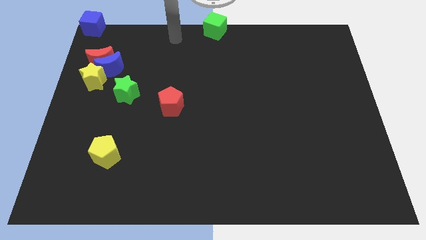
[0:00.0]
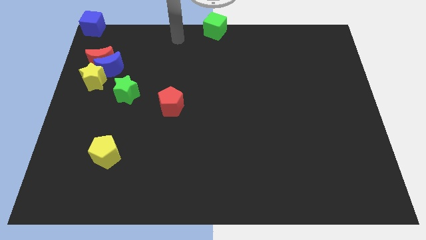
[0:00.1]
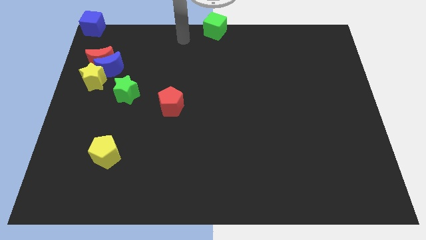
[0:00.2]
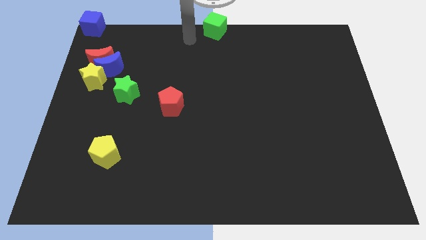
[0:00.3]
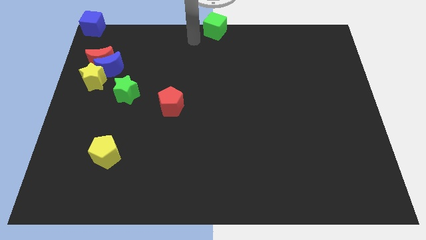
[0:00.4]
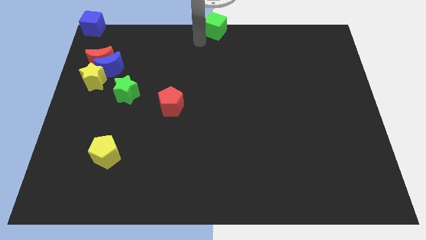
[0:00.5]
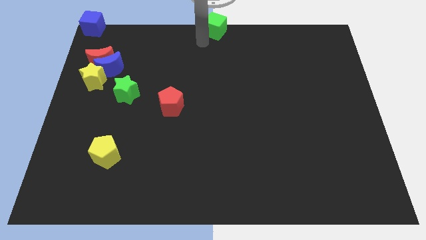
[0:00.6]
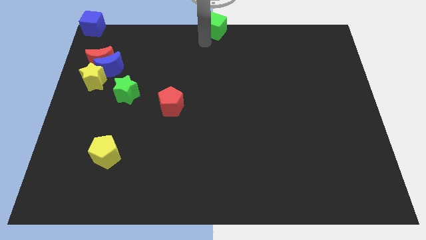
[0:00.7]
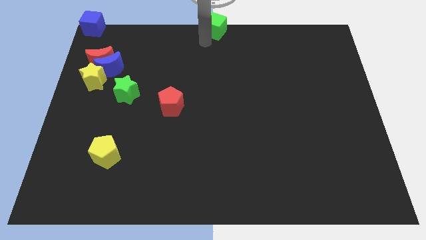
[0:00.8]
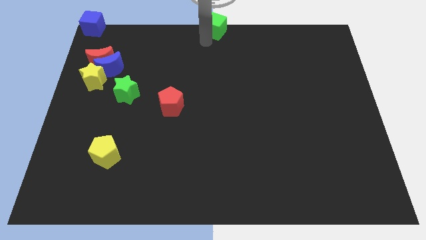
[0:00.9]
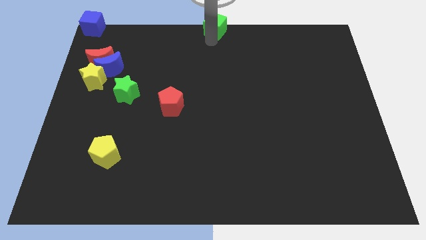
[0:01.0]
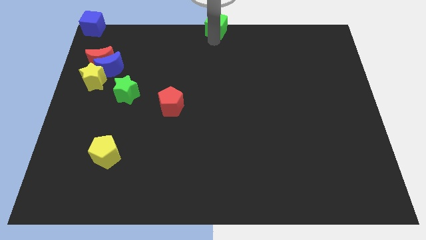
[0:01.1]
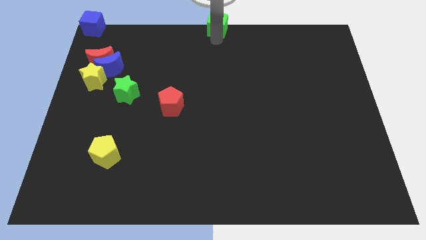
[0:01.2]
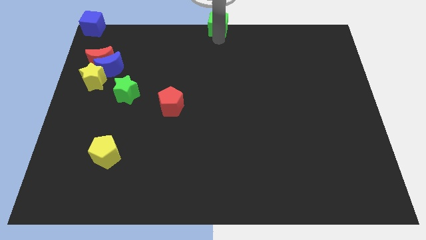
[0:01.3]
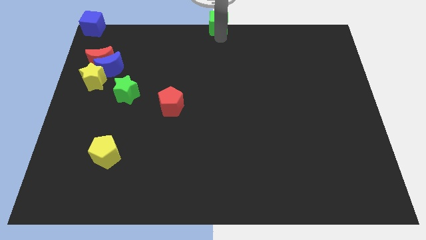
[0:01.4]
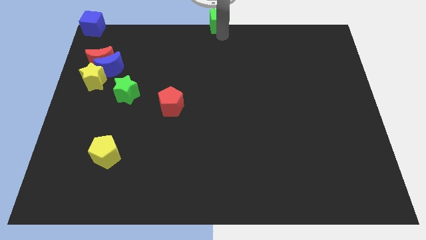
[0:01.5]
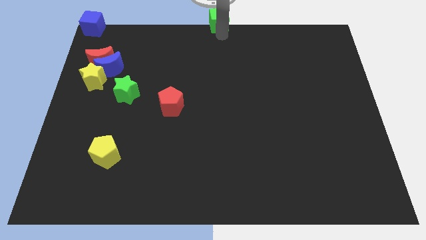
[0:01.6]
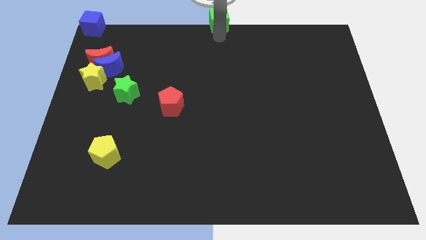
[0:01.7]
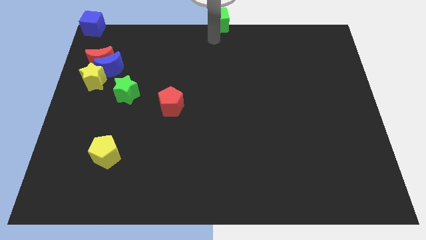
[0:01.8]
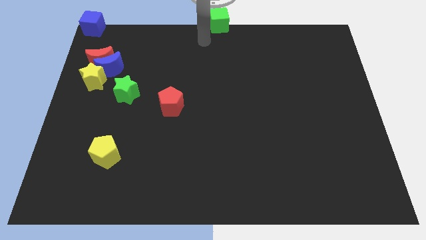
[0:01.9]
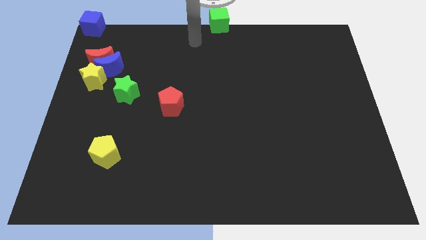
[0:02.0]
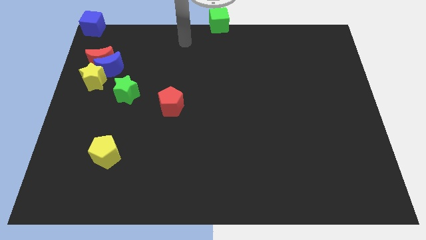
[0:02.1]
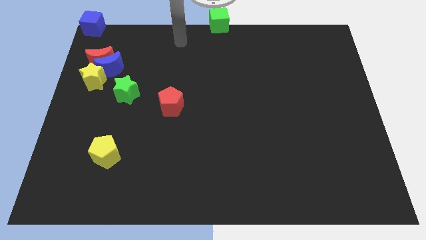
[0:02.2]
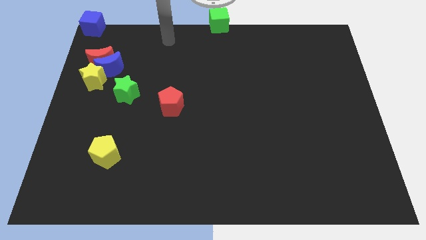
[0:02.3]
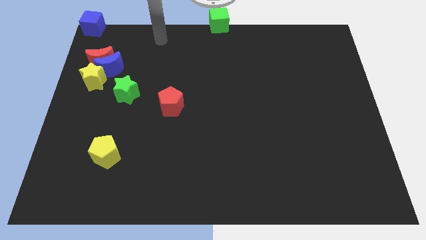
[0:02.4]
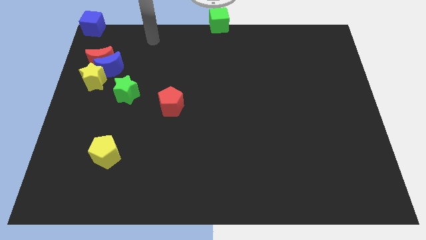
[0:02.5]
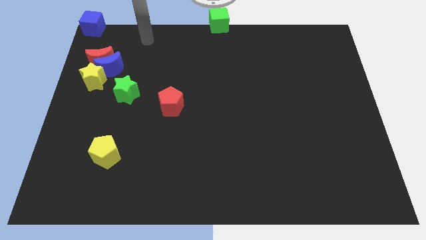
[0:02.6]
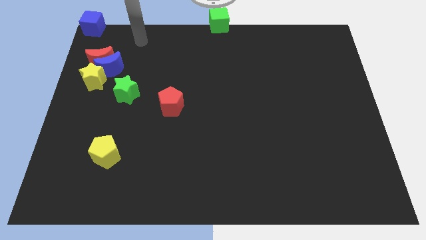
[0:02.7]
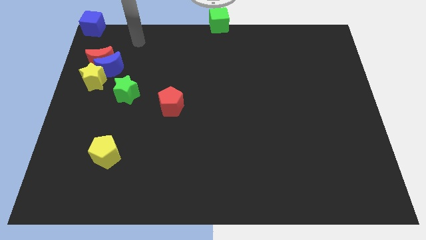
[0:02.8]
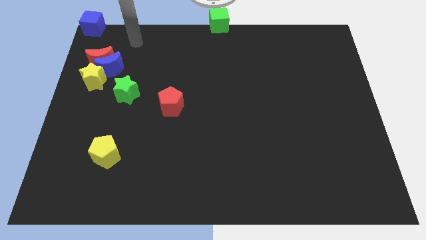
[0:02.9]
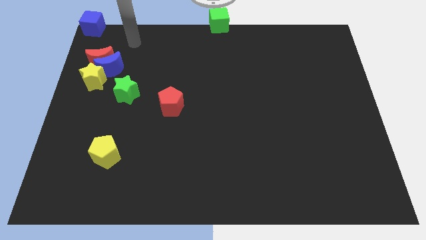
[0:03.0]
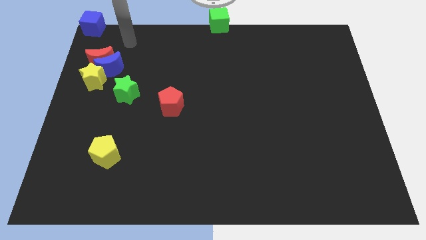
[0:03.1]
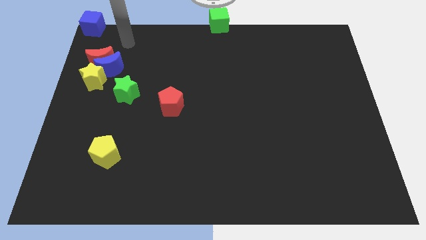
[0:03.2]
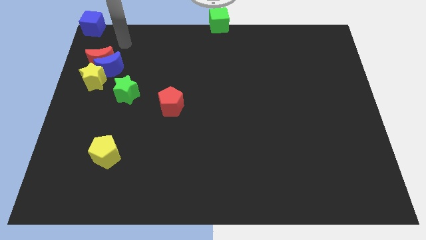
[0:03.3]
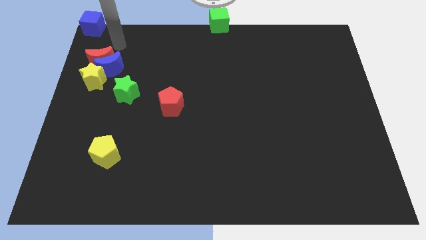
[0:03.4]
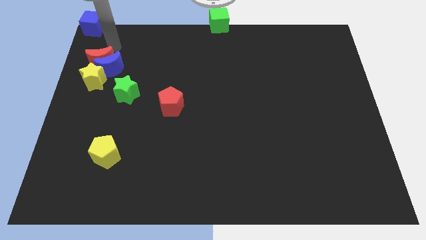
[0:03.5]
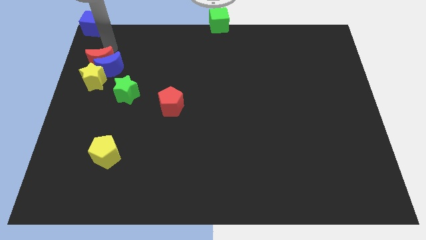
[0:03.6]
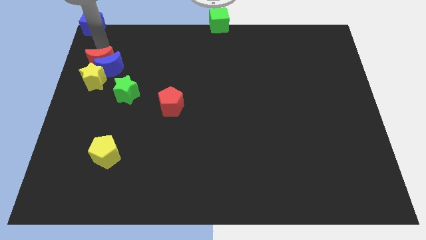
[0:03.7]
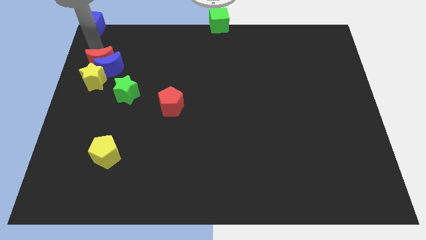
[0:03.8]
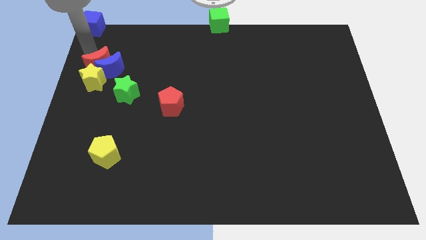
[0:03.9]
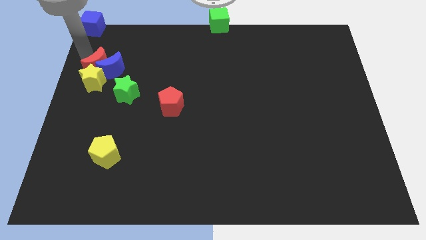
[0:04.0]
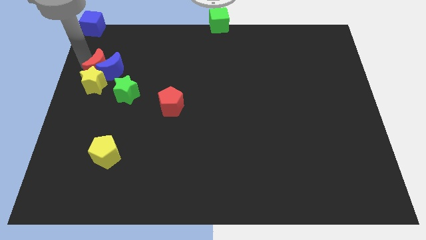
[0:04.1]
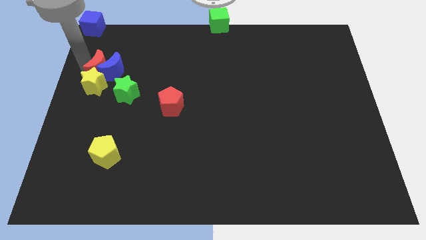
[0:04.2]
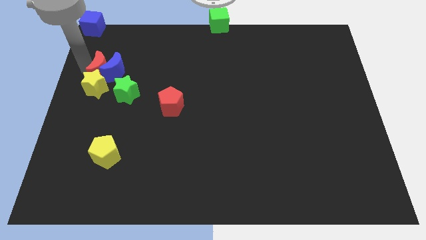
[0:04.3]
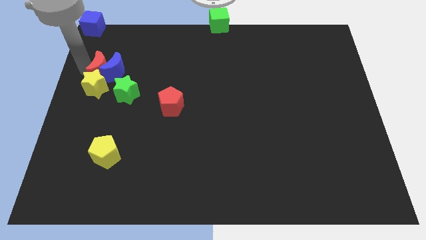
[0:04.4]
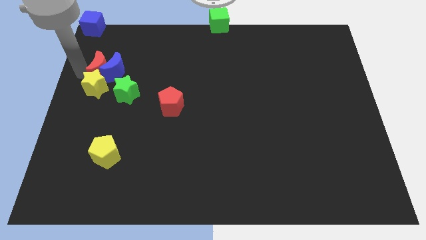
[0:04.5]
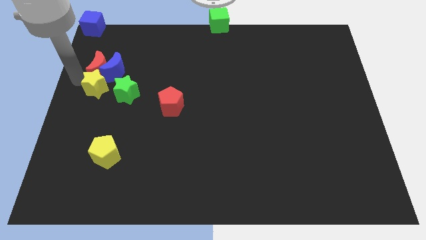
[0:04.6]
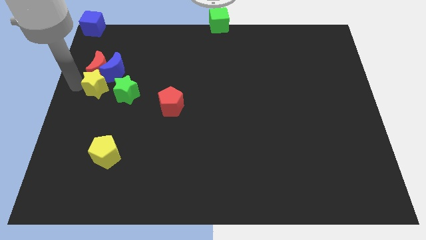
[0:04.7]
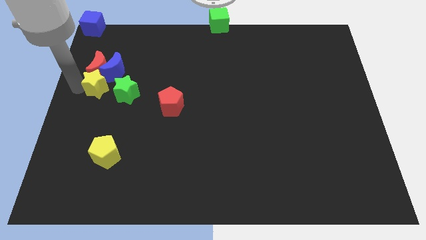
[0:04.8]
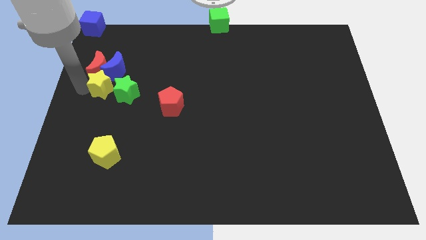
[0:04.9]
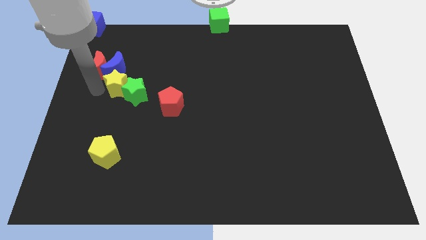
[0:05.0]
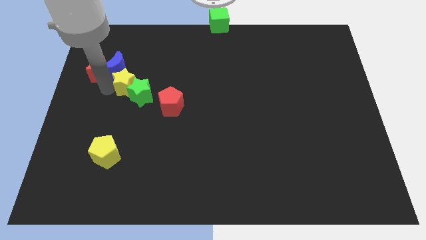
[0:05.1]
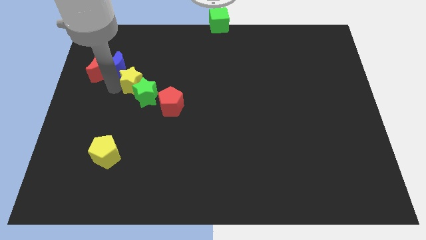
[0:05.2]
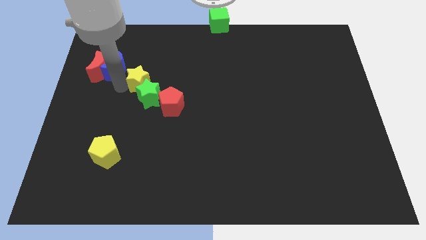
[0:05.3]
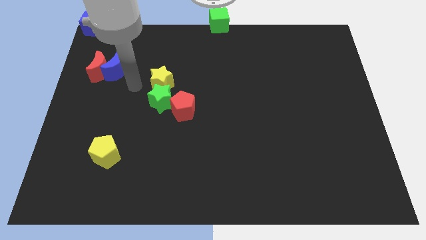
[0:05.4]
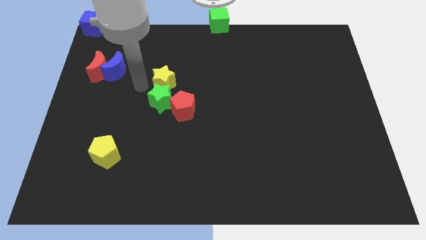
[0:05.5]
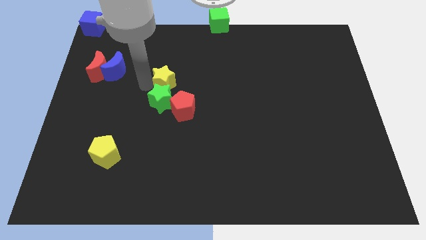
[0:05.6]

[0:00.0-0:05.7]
place the yellow star top of the green star

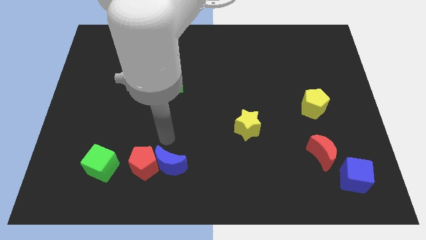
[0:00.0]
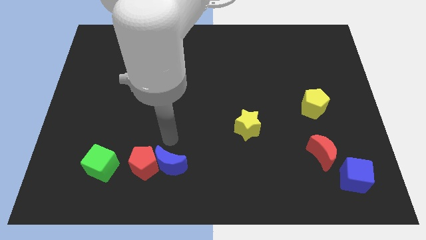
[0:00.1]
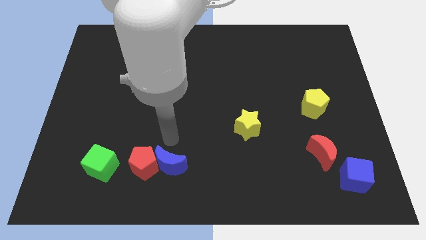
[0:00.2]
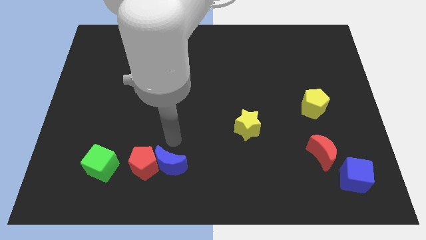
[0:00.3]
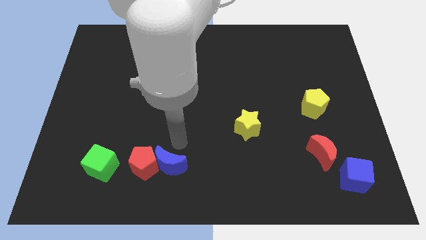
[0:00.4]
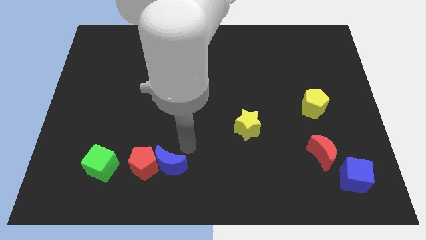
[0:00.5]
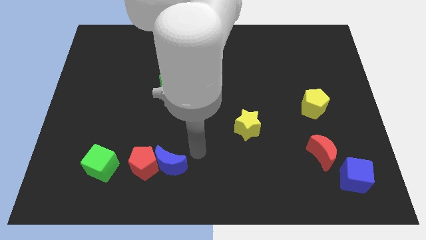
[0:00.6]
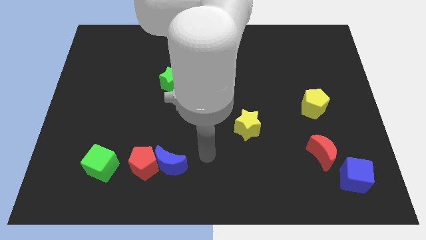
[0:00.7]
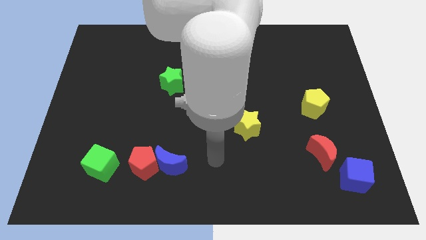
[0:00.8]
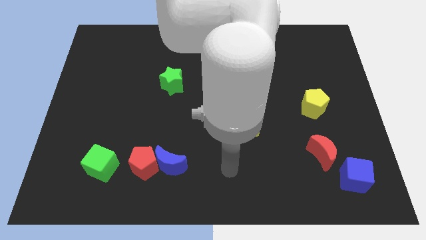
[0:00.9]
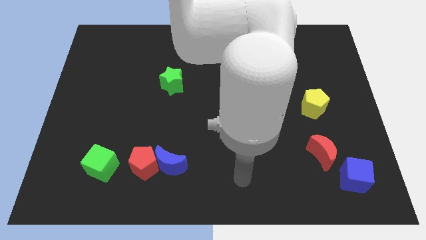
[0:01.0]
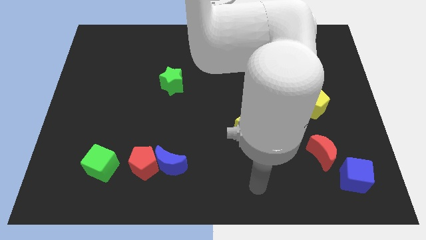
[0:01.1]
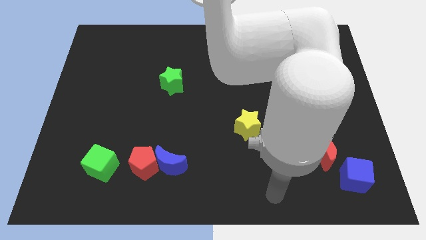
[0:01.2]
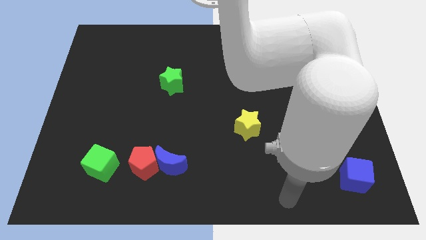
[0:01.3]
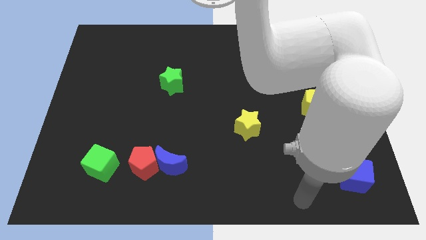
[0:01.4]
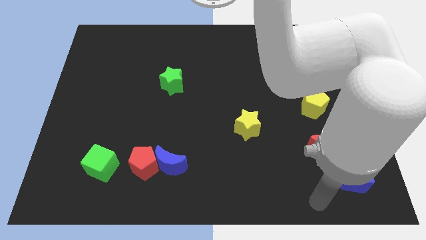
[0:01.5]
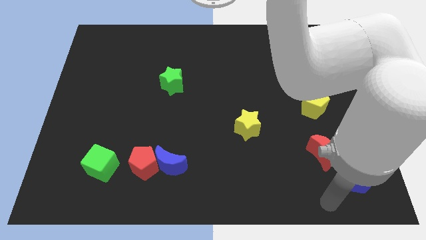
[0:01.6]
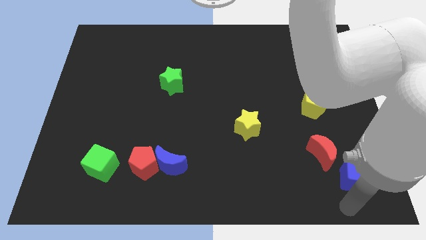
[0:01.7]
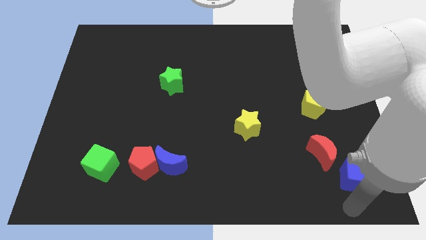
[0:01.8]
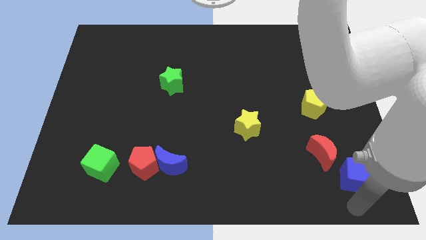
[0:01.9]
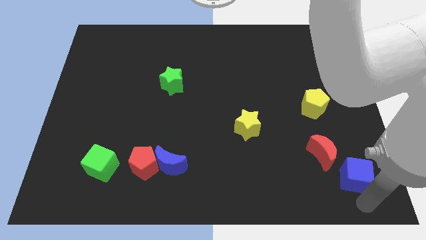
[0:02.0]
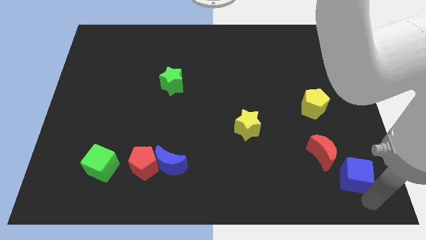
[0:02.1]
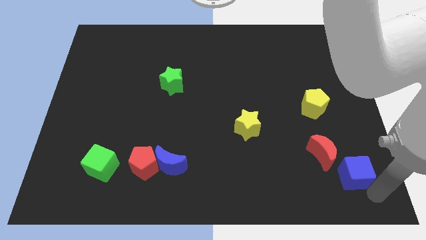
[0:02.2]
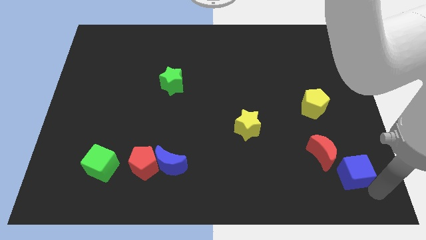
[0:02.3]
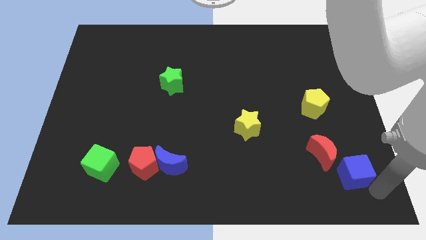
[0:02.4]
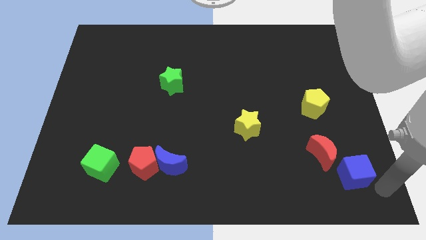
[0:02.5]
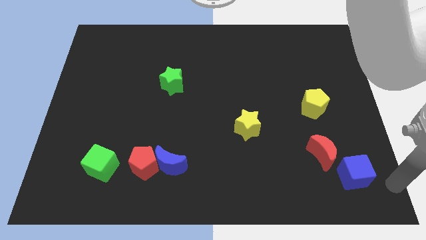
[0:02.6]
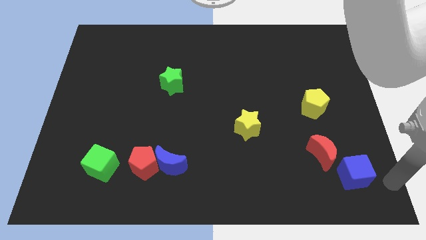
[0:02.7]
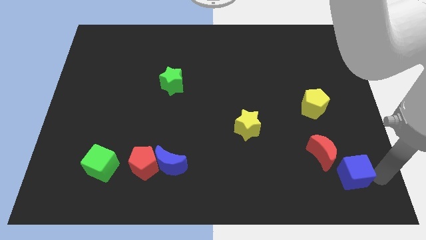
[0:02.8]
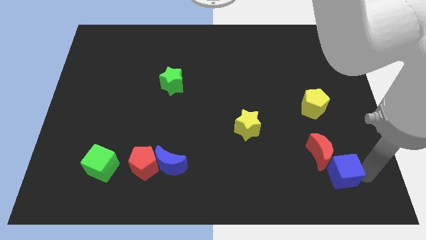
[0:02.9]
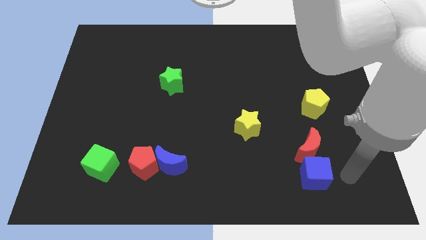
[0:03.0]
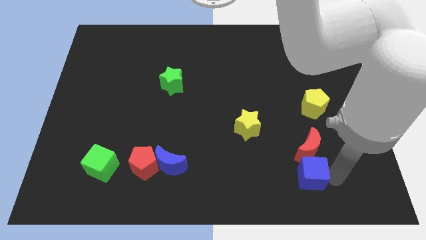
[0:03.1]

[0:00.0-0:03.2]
push the blue cube to the bottom of the red crescent
